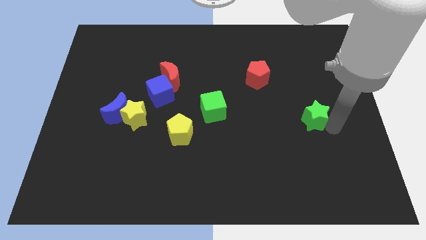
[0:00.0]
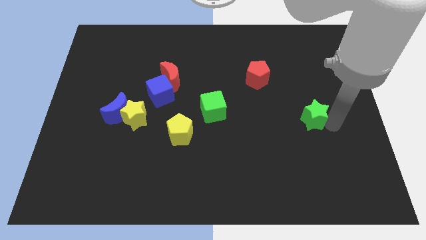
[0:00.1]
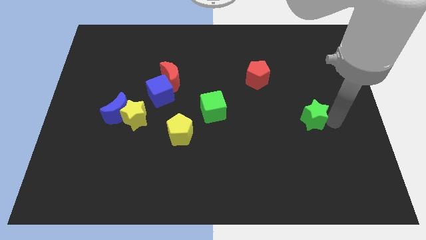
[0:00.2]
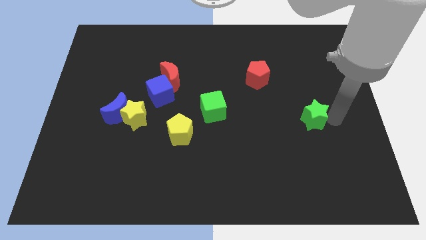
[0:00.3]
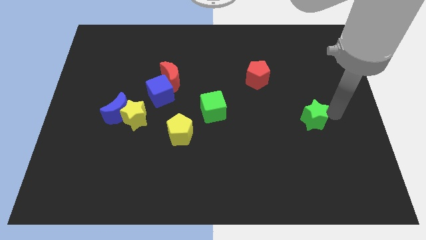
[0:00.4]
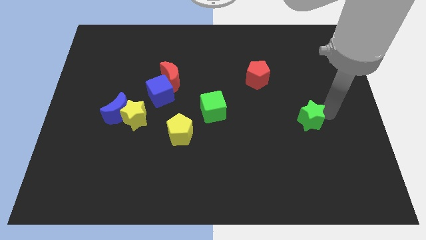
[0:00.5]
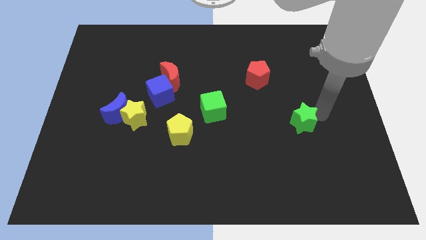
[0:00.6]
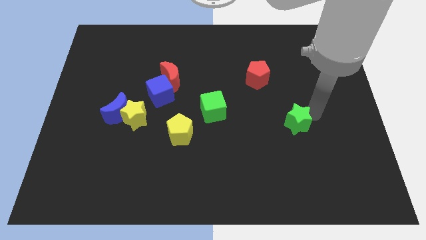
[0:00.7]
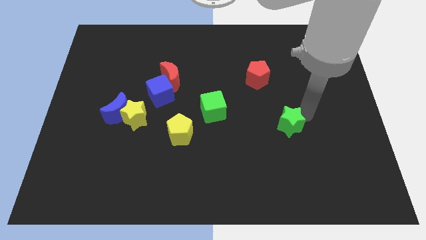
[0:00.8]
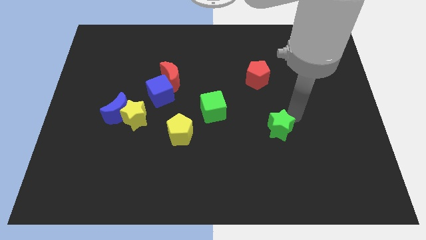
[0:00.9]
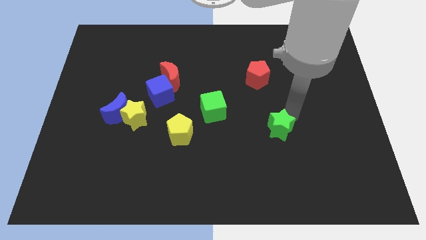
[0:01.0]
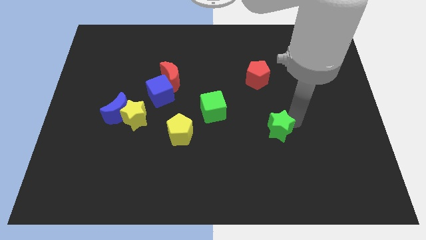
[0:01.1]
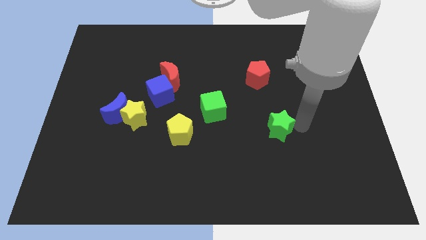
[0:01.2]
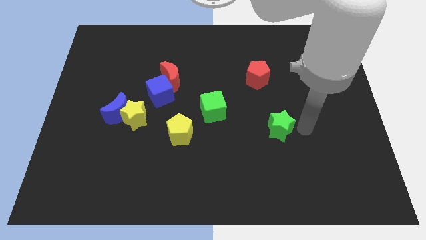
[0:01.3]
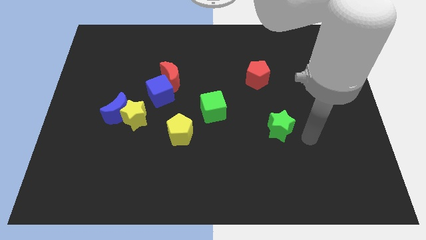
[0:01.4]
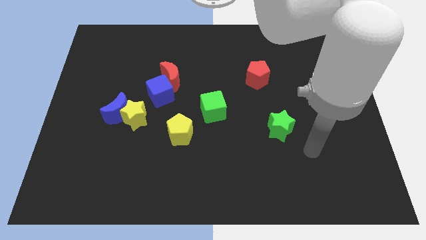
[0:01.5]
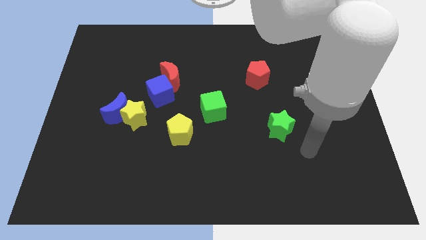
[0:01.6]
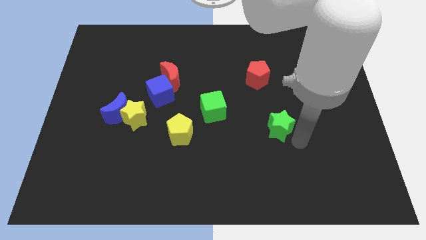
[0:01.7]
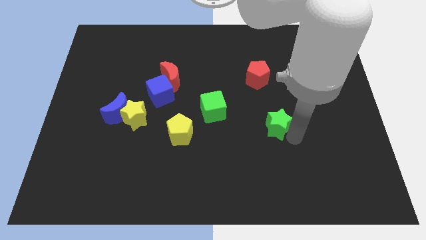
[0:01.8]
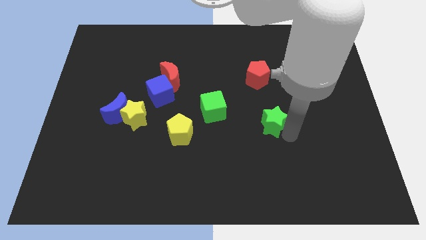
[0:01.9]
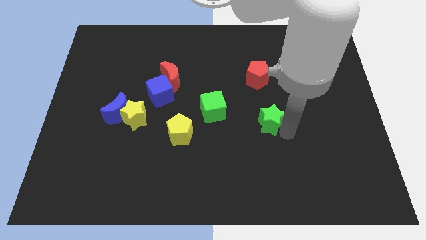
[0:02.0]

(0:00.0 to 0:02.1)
push the green star to the bottom of the red pentagon

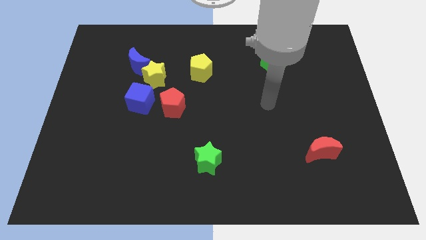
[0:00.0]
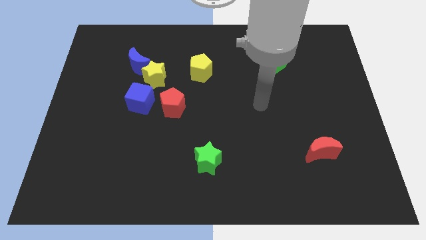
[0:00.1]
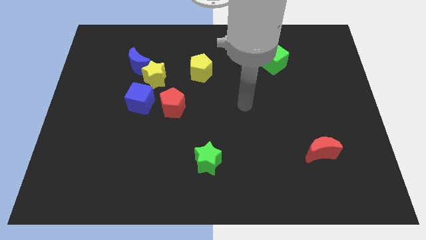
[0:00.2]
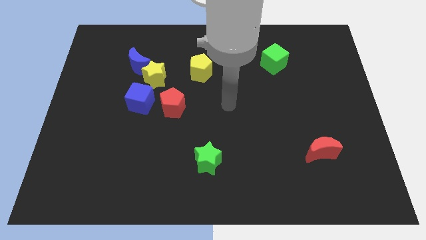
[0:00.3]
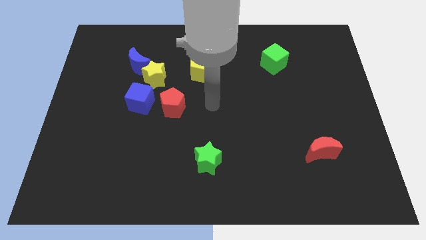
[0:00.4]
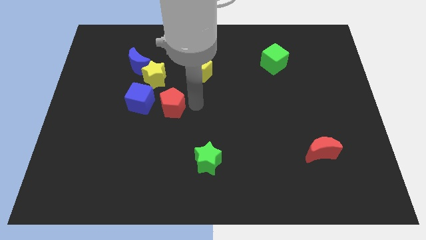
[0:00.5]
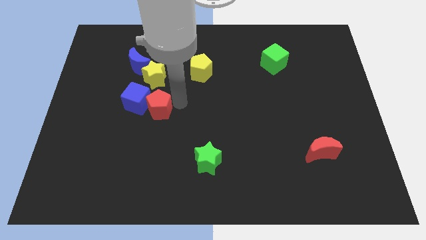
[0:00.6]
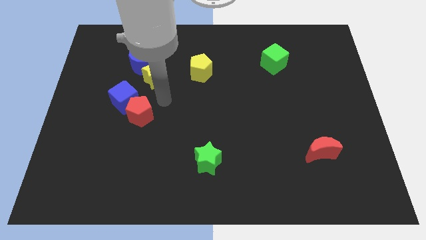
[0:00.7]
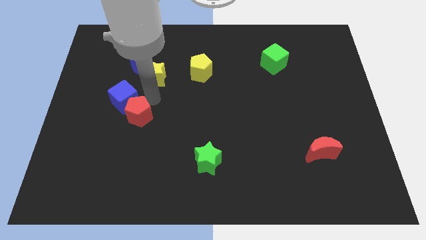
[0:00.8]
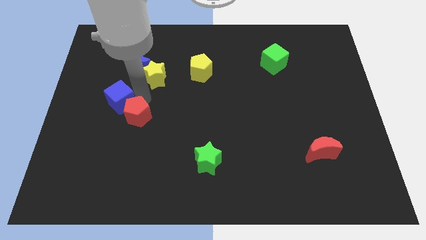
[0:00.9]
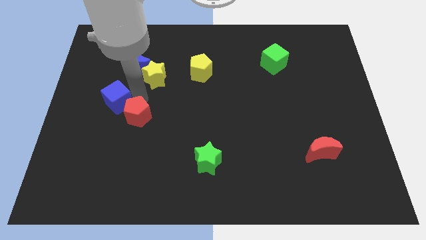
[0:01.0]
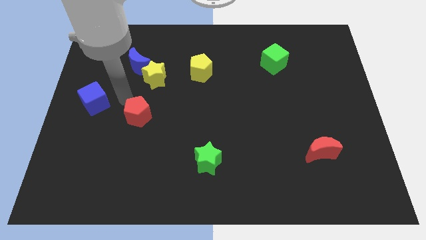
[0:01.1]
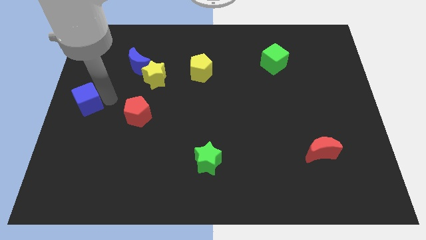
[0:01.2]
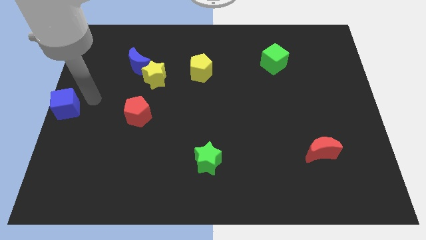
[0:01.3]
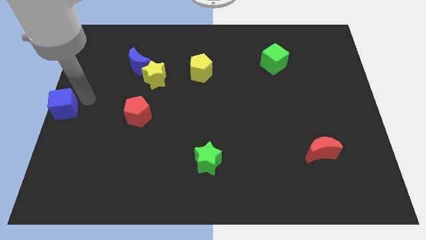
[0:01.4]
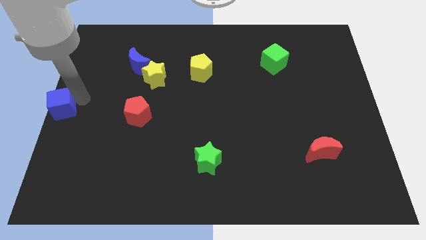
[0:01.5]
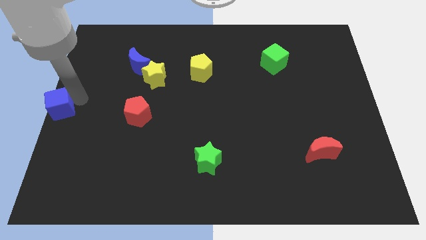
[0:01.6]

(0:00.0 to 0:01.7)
move the blue cube towards the center left

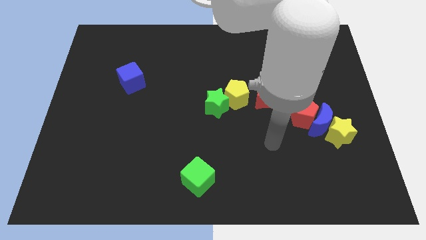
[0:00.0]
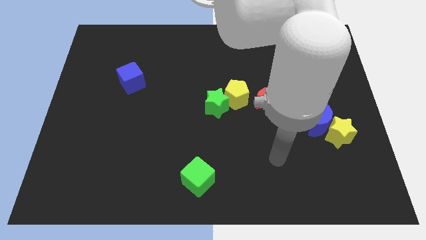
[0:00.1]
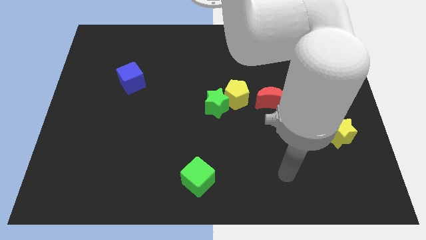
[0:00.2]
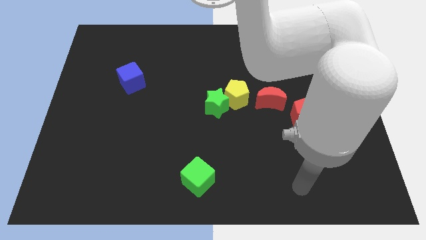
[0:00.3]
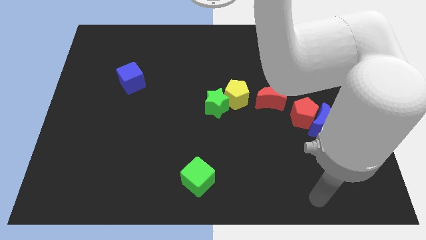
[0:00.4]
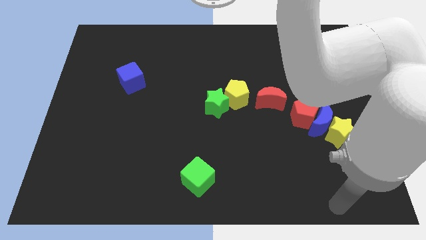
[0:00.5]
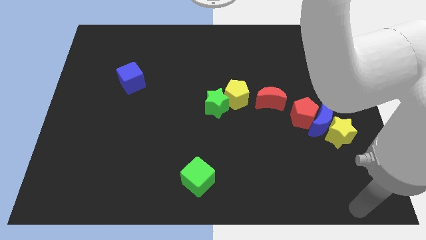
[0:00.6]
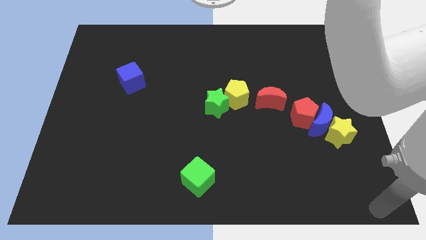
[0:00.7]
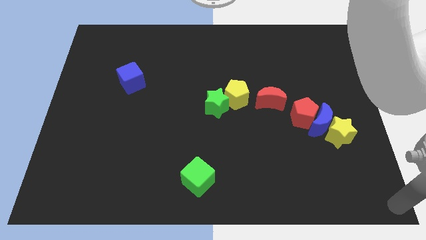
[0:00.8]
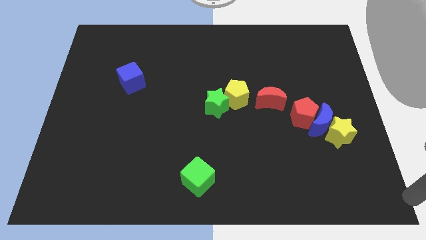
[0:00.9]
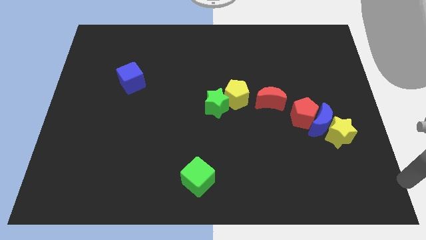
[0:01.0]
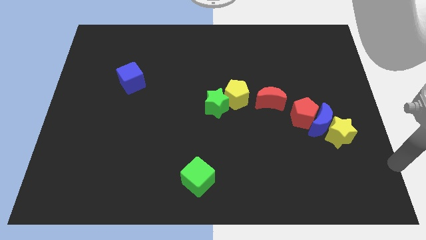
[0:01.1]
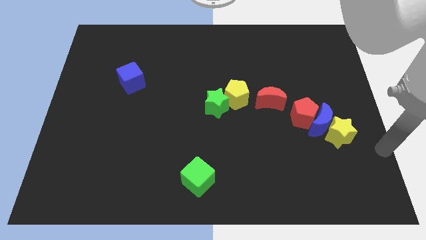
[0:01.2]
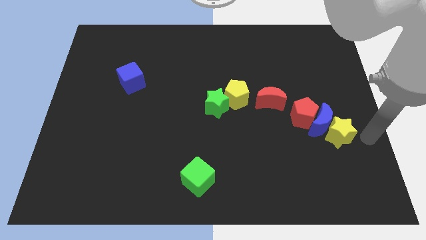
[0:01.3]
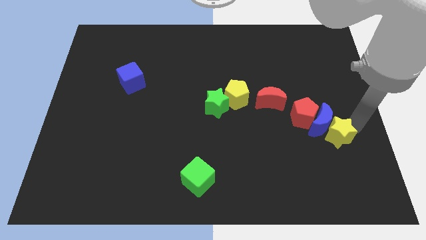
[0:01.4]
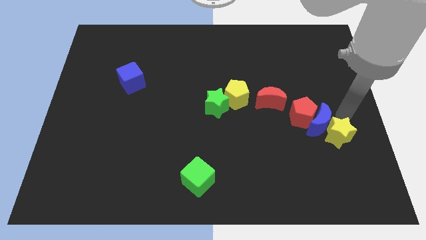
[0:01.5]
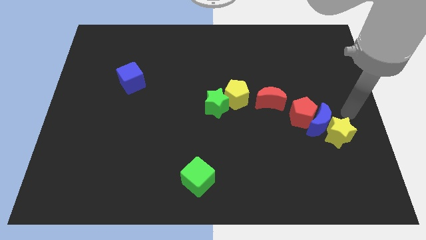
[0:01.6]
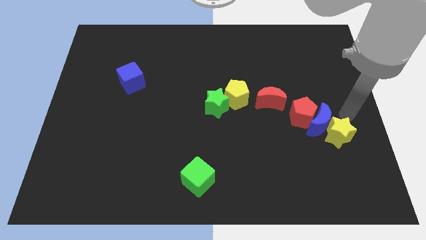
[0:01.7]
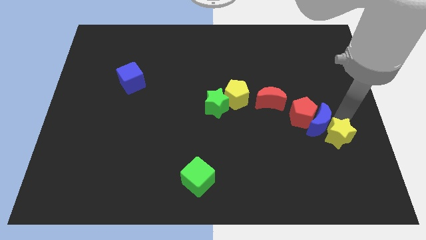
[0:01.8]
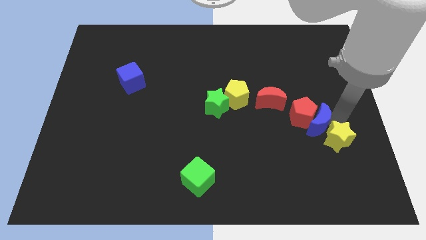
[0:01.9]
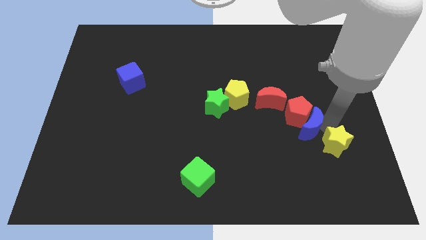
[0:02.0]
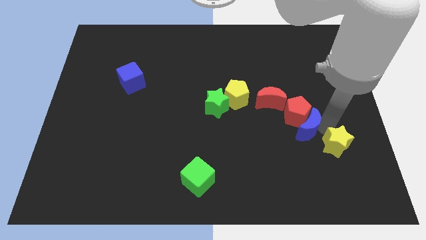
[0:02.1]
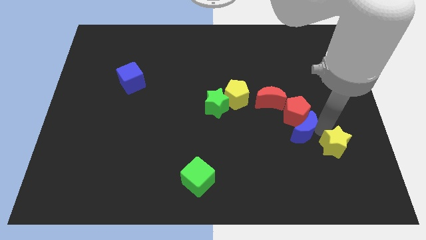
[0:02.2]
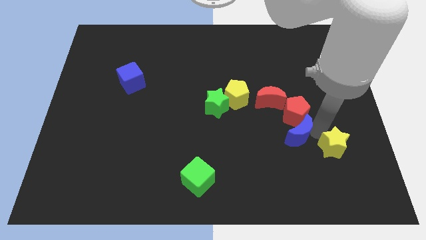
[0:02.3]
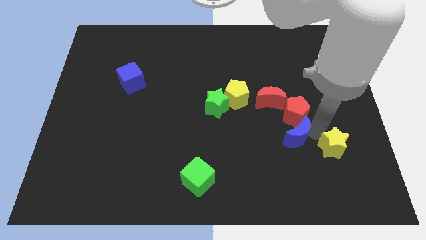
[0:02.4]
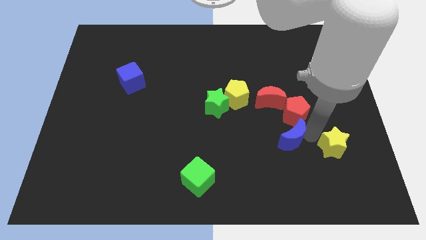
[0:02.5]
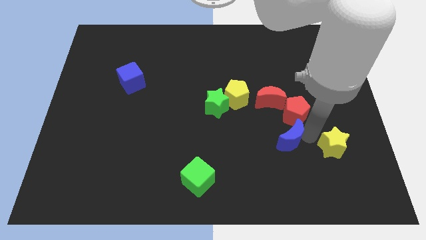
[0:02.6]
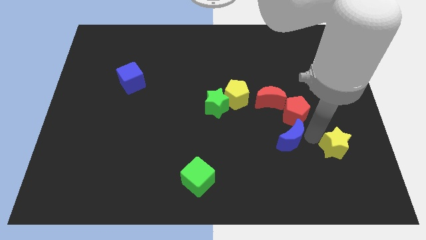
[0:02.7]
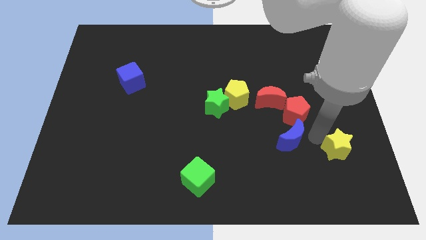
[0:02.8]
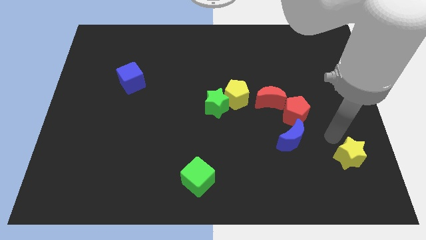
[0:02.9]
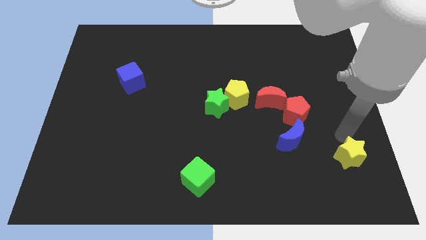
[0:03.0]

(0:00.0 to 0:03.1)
separate the yellow star and blue crescent

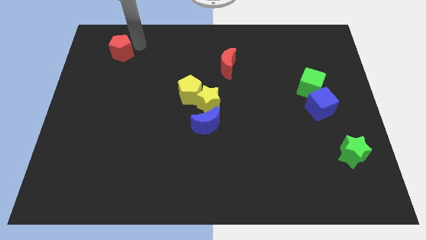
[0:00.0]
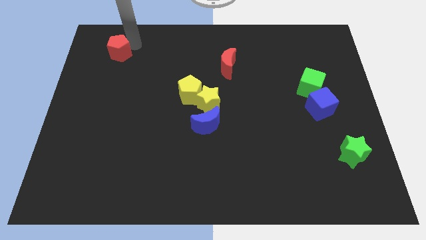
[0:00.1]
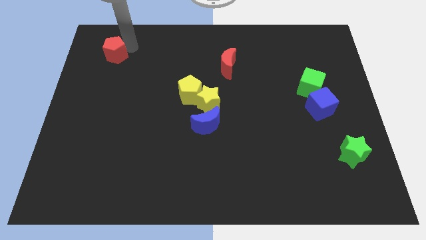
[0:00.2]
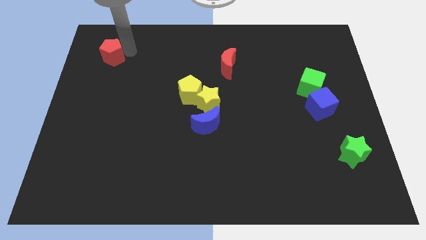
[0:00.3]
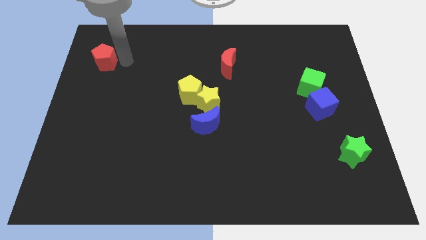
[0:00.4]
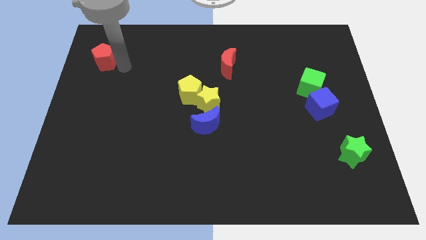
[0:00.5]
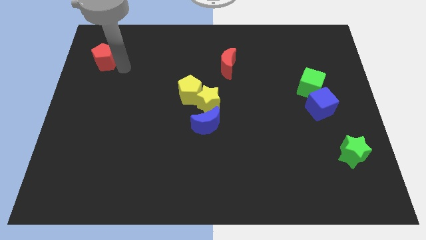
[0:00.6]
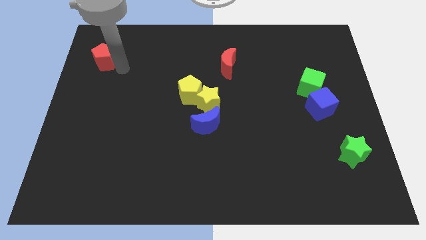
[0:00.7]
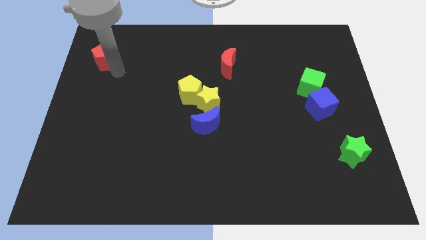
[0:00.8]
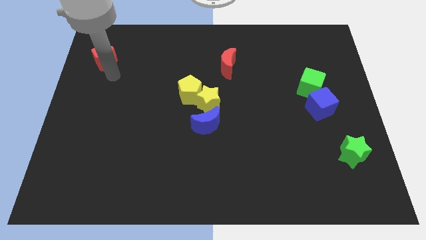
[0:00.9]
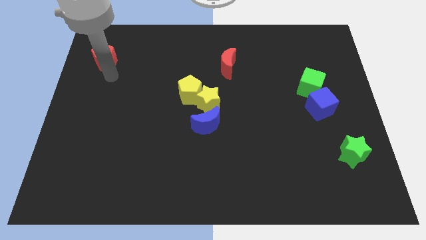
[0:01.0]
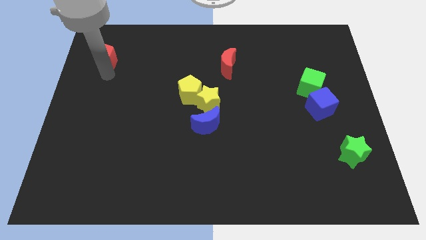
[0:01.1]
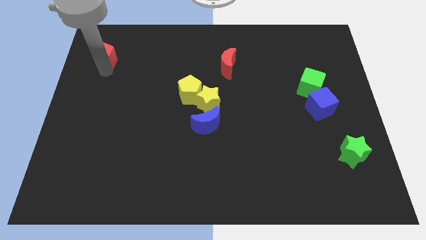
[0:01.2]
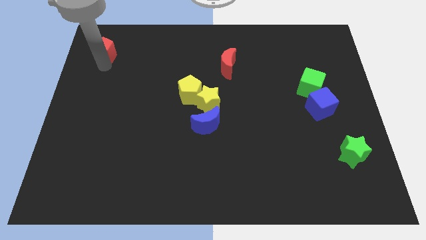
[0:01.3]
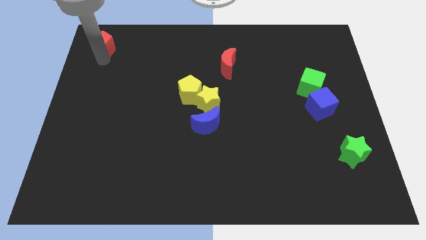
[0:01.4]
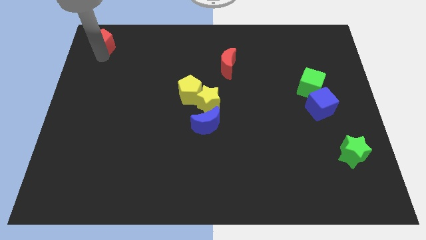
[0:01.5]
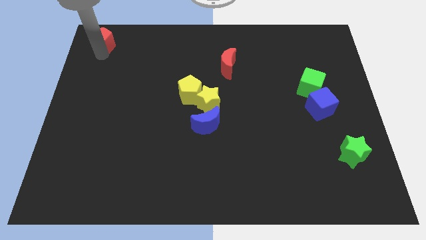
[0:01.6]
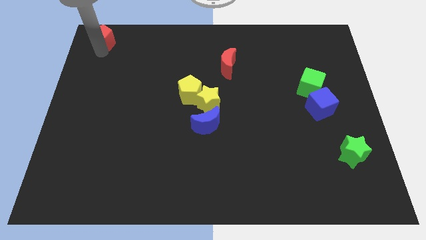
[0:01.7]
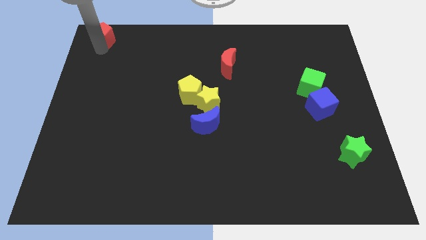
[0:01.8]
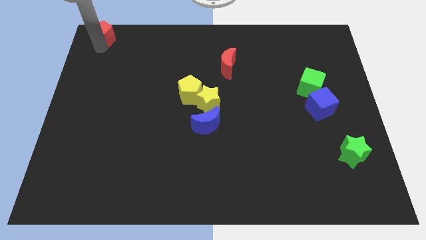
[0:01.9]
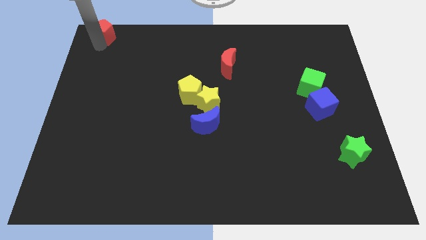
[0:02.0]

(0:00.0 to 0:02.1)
place red pentagon at the top left
